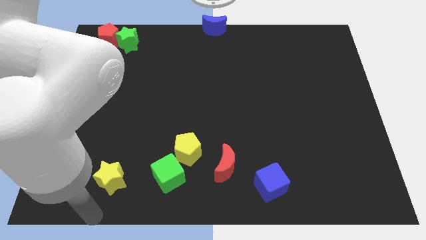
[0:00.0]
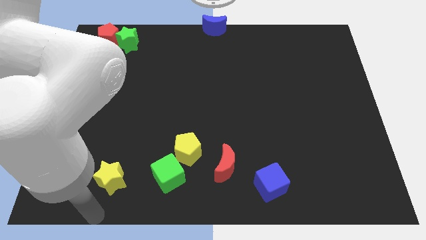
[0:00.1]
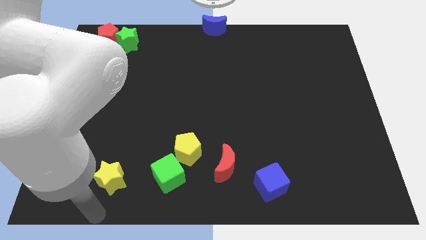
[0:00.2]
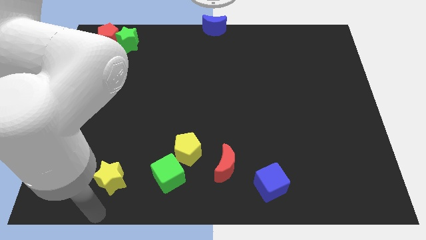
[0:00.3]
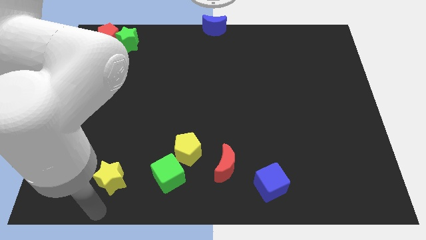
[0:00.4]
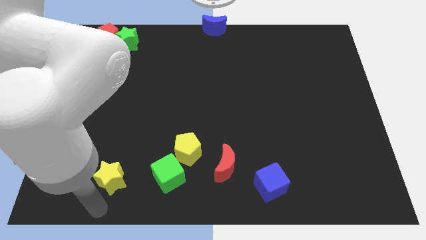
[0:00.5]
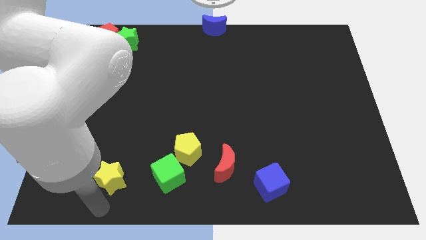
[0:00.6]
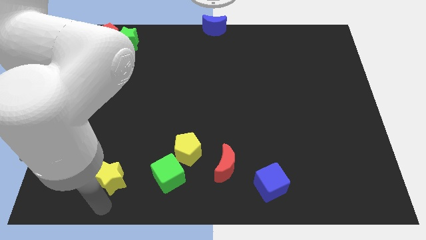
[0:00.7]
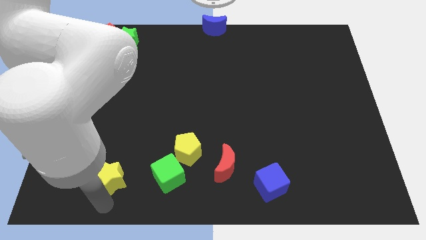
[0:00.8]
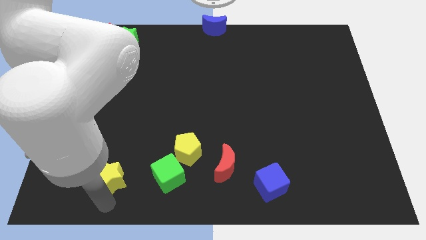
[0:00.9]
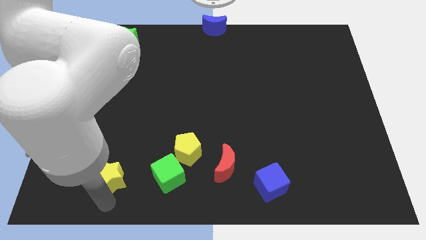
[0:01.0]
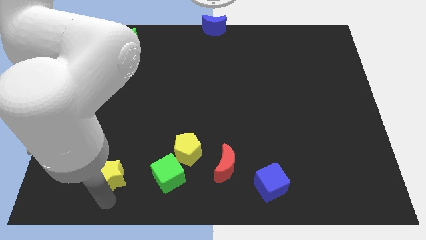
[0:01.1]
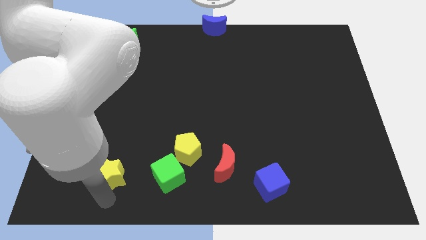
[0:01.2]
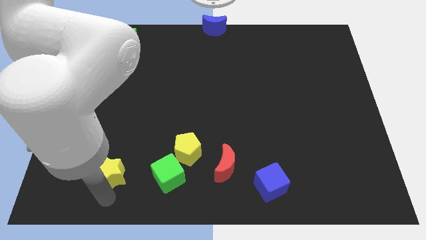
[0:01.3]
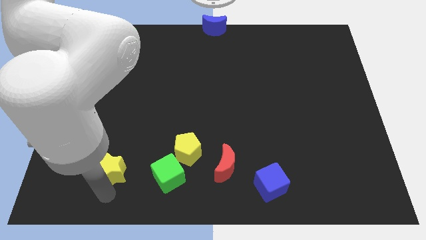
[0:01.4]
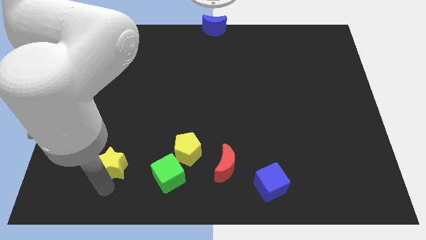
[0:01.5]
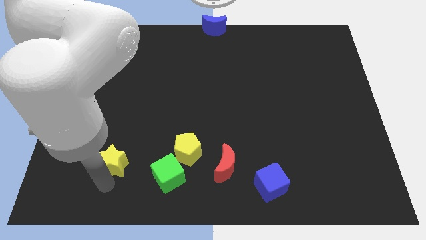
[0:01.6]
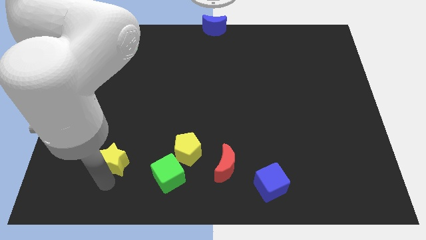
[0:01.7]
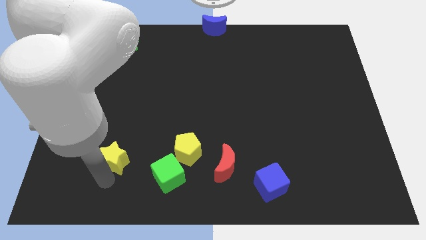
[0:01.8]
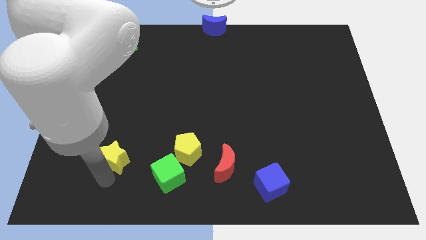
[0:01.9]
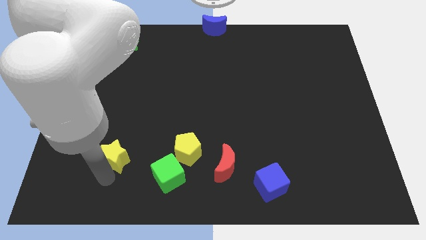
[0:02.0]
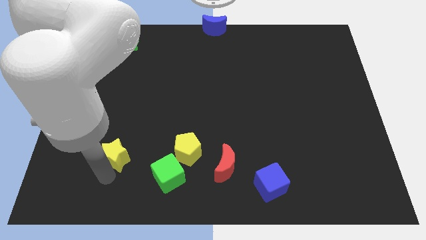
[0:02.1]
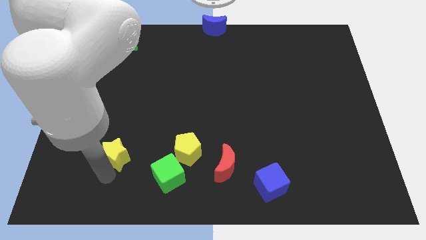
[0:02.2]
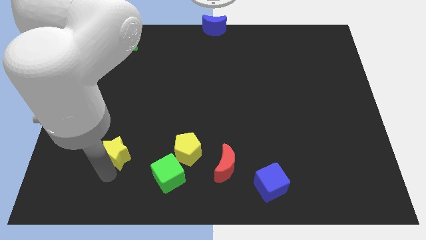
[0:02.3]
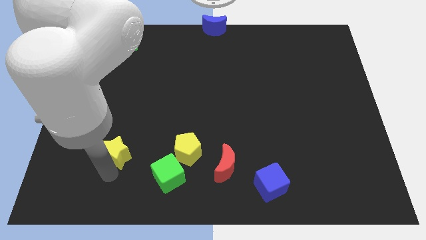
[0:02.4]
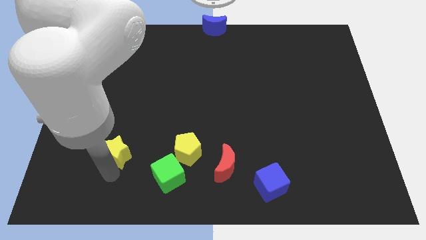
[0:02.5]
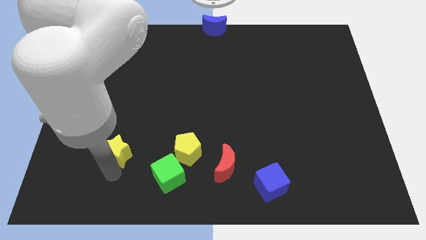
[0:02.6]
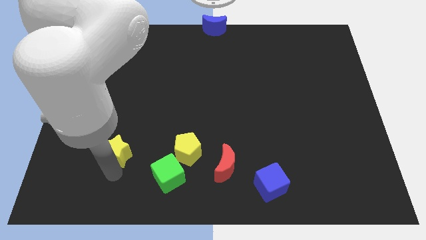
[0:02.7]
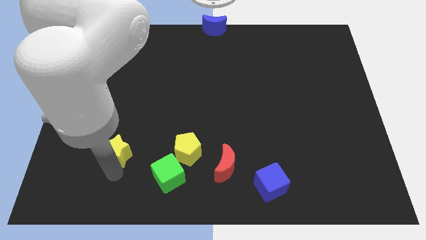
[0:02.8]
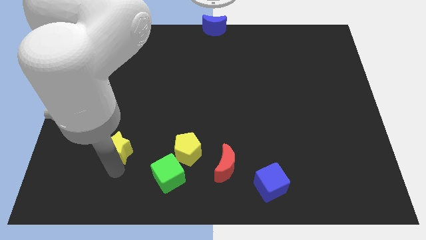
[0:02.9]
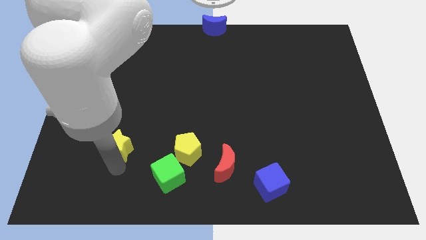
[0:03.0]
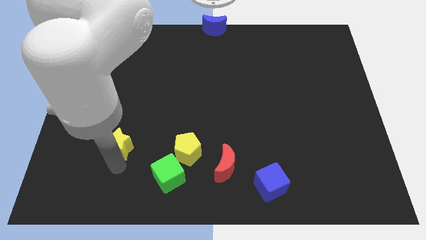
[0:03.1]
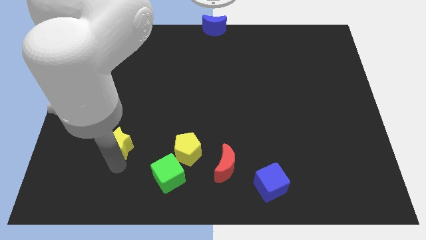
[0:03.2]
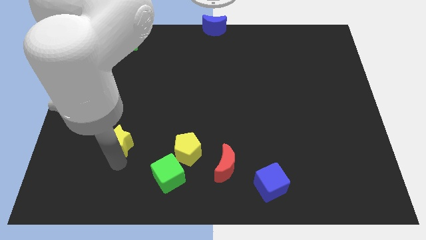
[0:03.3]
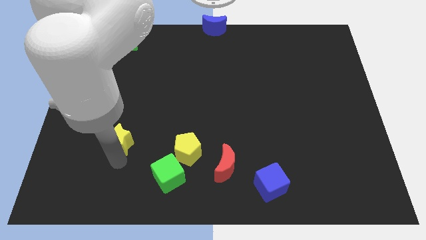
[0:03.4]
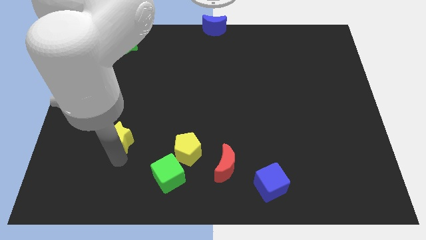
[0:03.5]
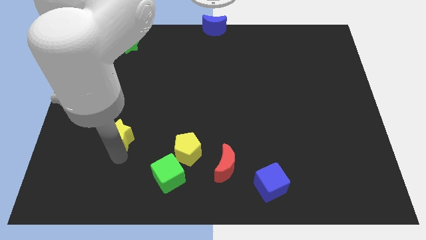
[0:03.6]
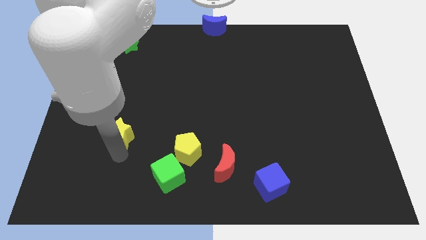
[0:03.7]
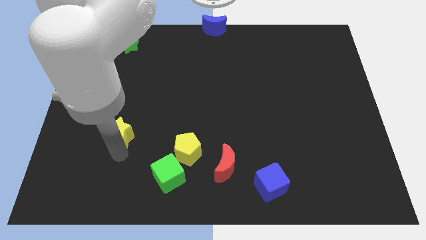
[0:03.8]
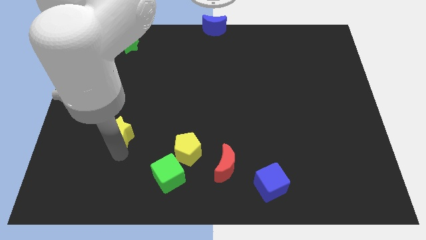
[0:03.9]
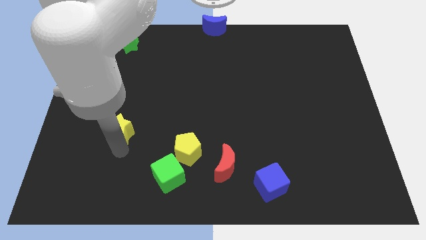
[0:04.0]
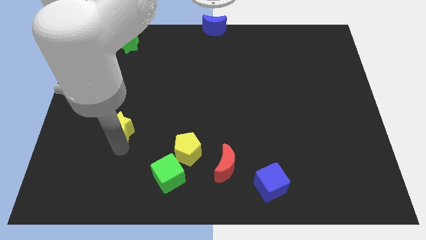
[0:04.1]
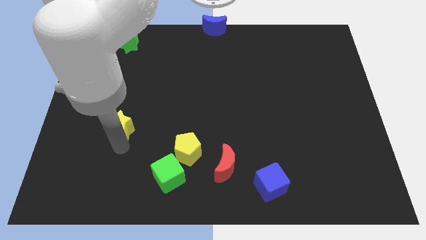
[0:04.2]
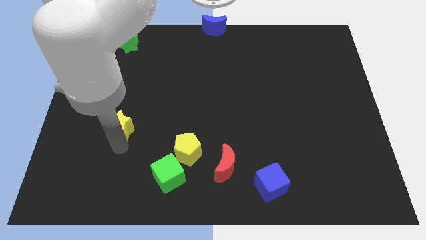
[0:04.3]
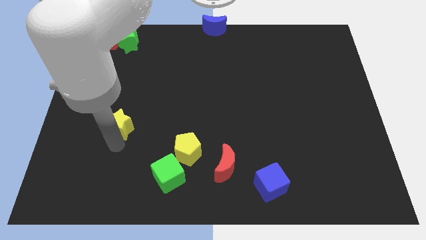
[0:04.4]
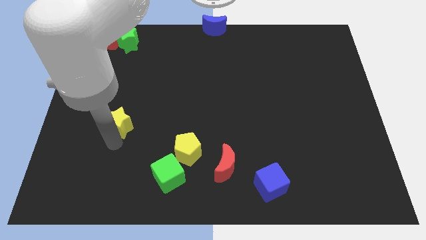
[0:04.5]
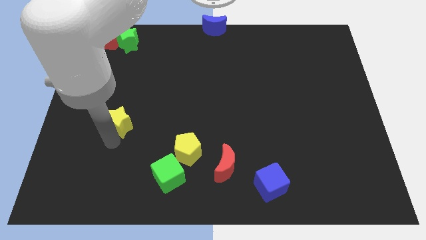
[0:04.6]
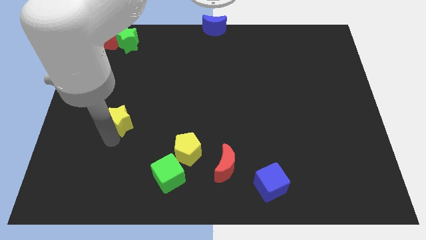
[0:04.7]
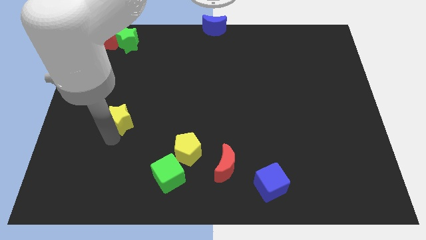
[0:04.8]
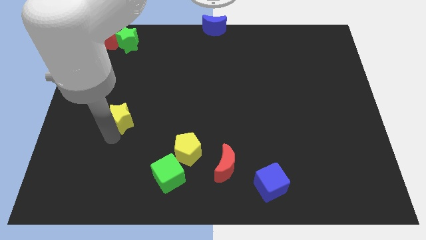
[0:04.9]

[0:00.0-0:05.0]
push the yellow star upwards

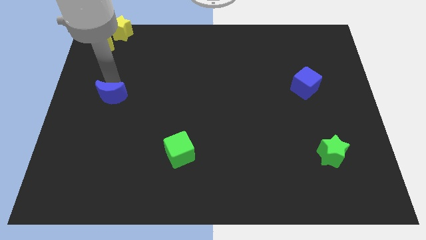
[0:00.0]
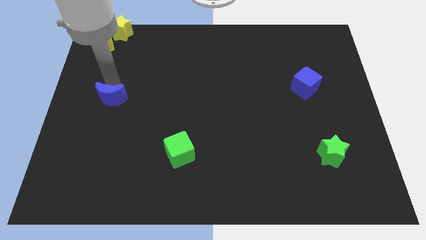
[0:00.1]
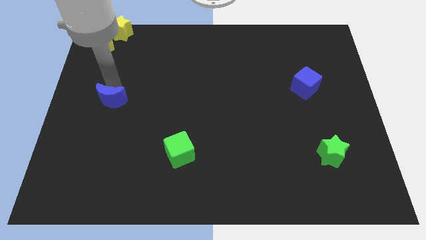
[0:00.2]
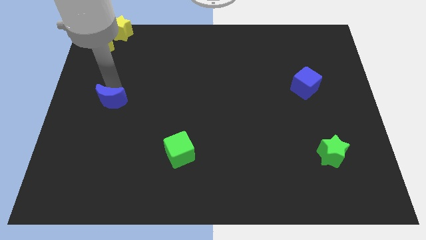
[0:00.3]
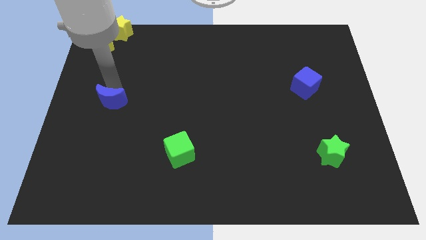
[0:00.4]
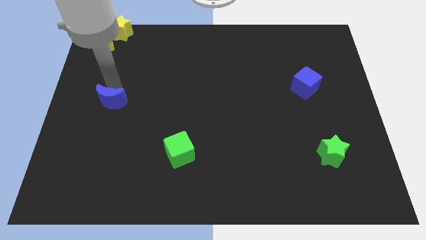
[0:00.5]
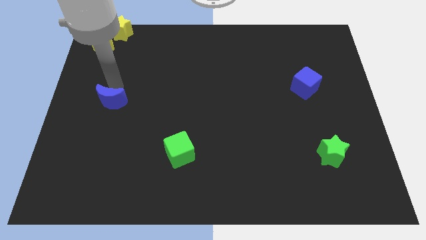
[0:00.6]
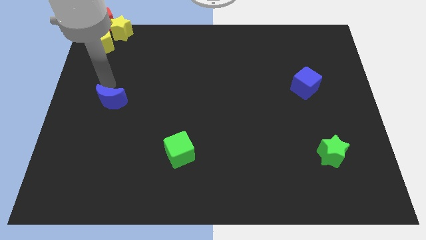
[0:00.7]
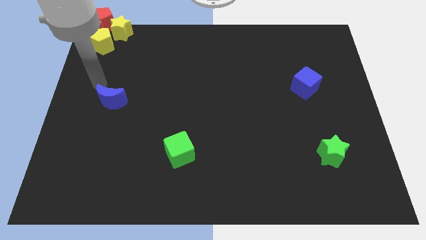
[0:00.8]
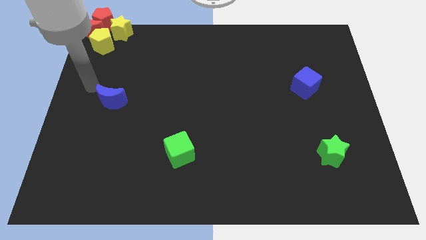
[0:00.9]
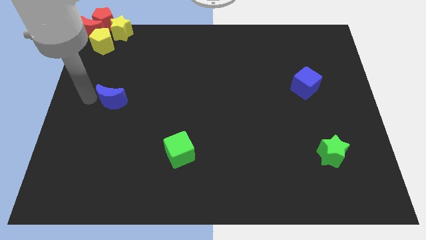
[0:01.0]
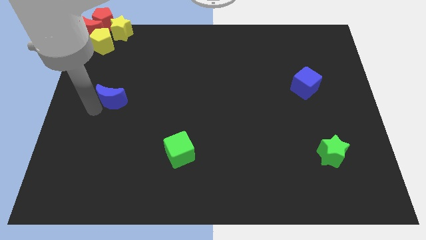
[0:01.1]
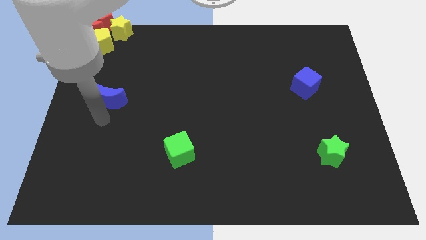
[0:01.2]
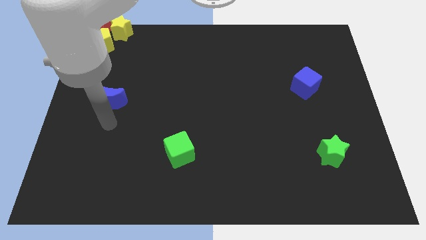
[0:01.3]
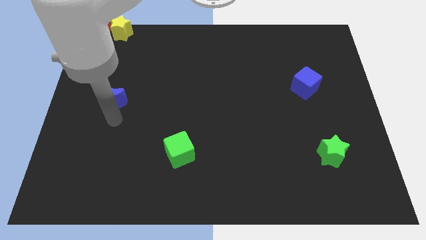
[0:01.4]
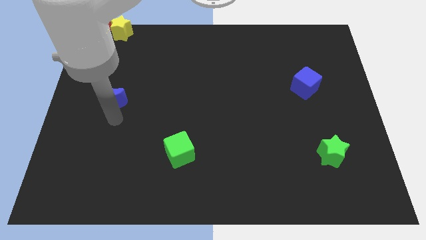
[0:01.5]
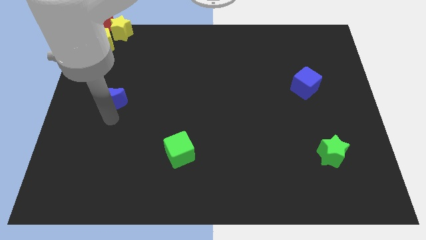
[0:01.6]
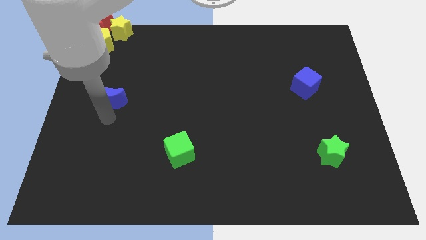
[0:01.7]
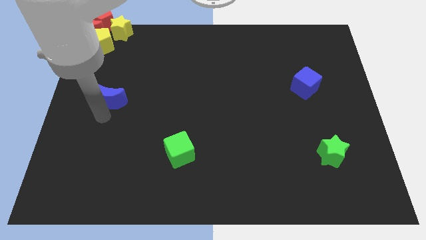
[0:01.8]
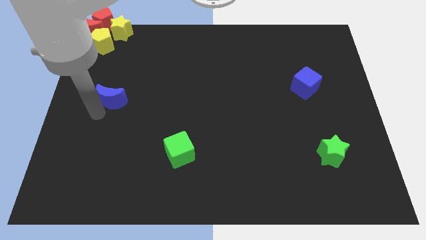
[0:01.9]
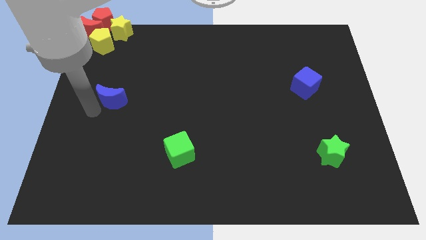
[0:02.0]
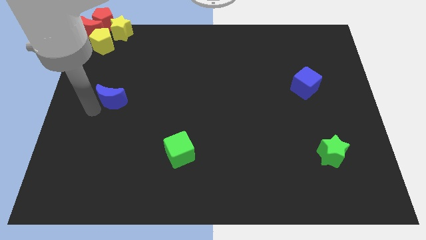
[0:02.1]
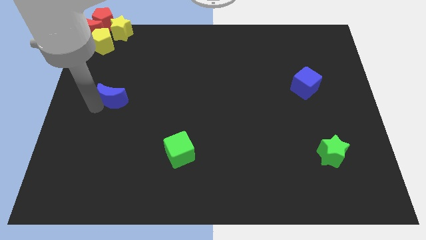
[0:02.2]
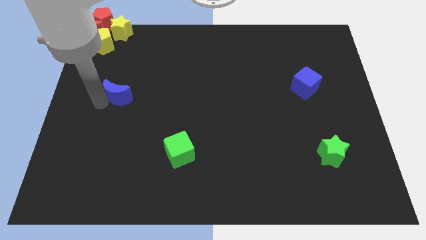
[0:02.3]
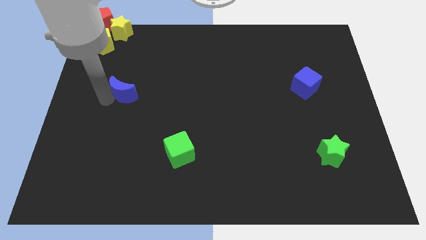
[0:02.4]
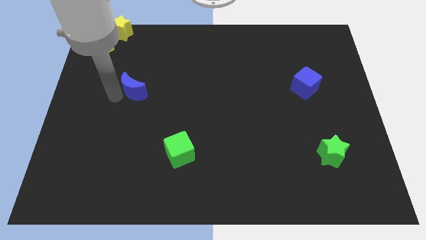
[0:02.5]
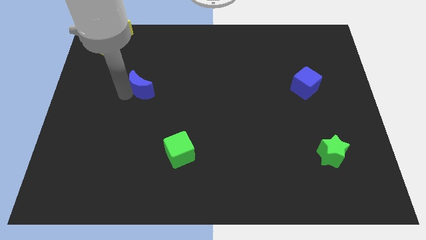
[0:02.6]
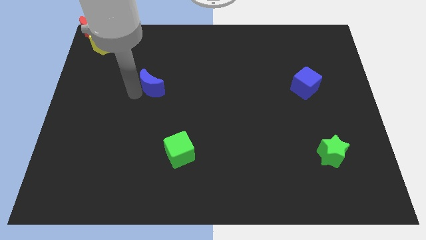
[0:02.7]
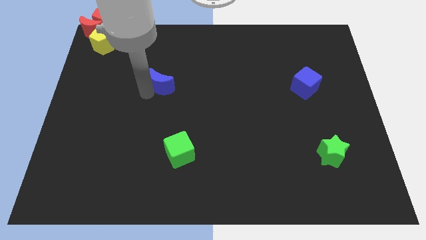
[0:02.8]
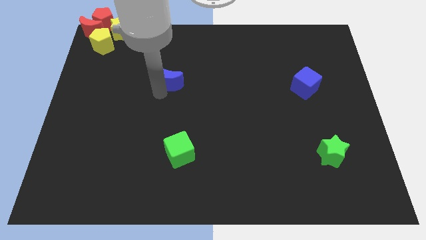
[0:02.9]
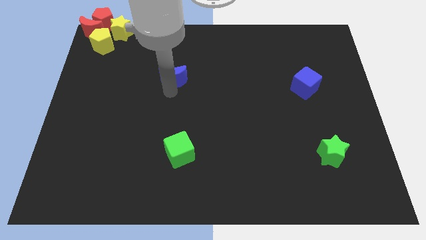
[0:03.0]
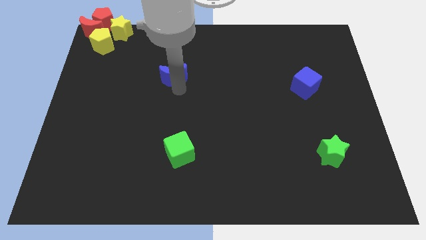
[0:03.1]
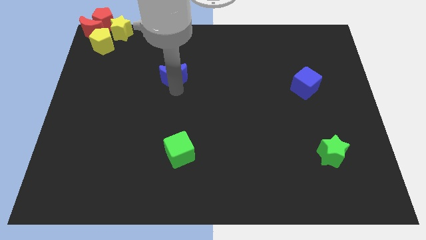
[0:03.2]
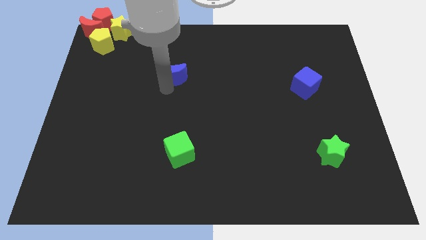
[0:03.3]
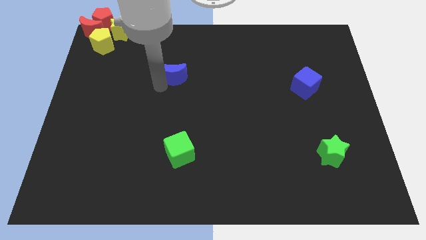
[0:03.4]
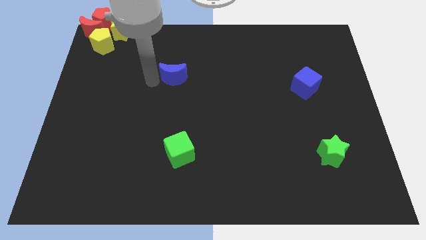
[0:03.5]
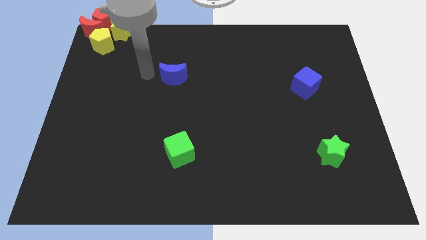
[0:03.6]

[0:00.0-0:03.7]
place the blue crescent vertically above the green cube

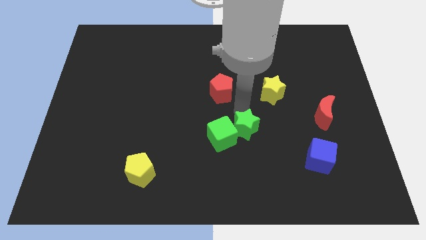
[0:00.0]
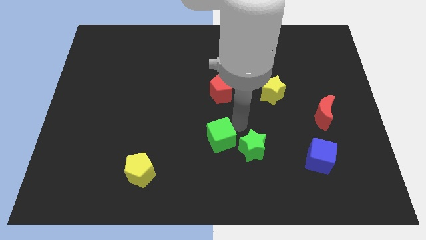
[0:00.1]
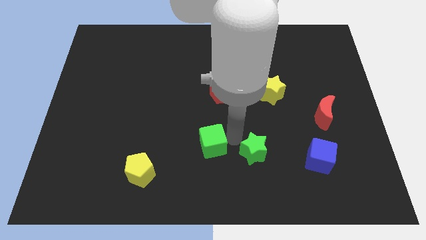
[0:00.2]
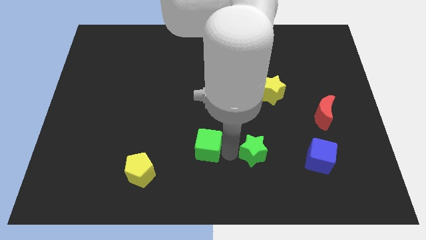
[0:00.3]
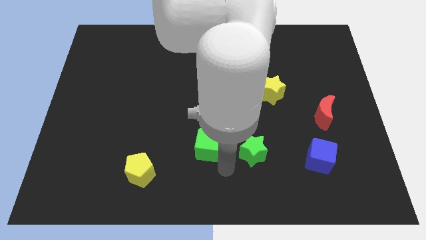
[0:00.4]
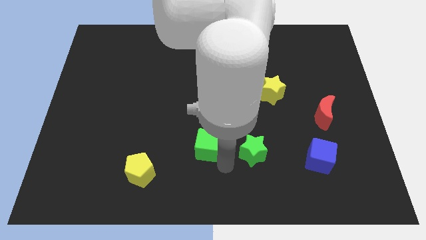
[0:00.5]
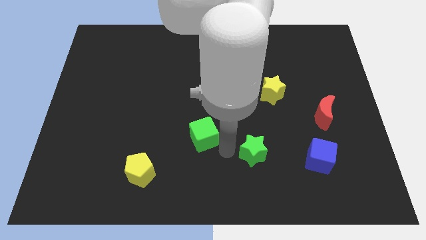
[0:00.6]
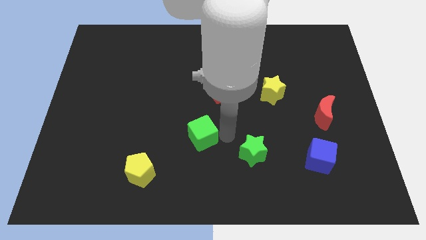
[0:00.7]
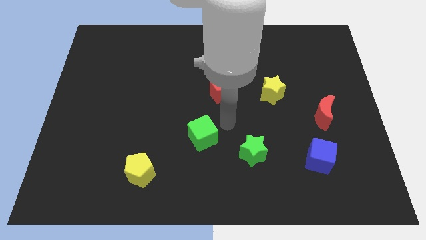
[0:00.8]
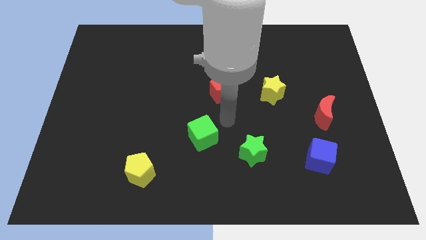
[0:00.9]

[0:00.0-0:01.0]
separate the green star and the green cube
